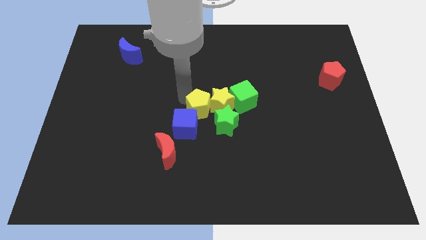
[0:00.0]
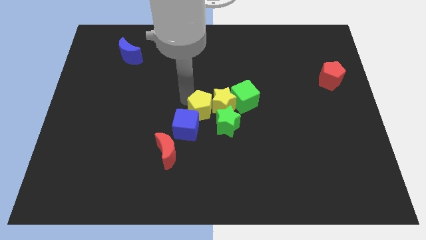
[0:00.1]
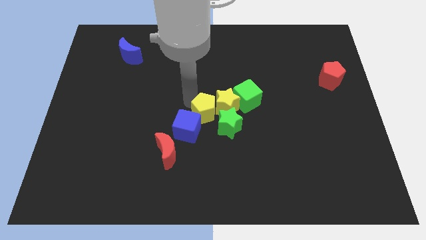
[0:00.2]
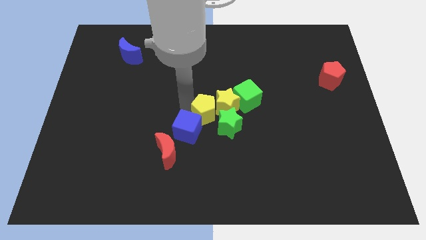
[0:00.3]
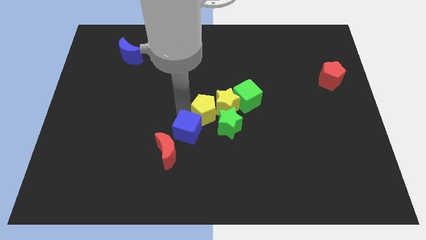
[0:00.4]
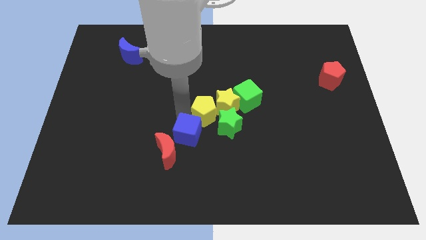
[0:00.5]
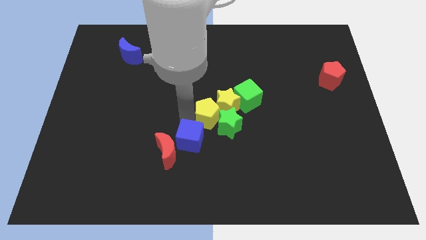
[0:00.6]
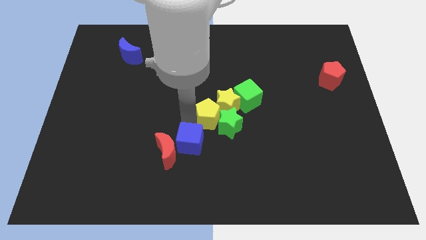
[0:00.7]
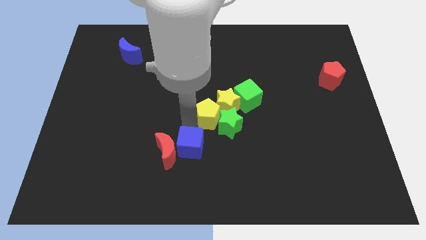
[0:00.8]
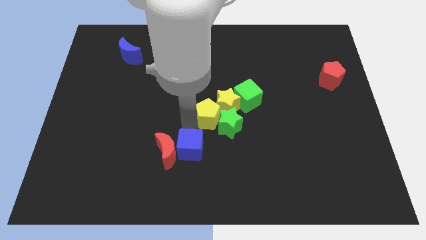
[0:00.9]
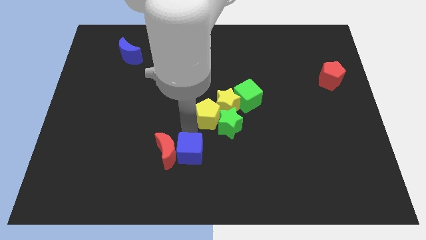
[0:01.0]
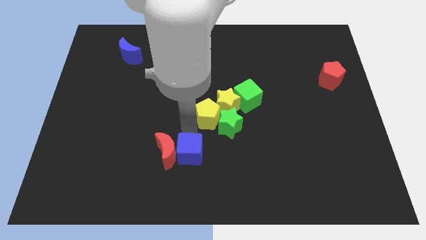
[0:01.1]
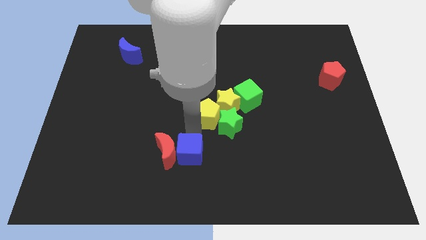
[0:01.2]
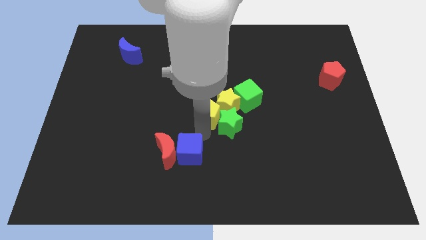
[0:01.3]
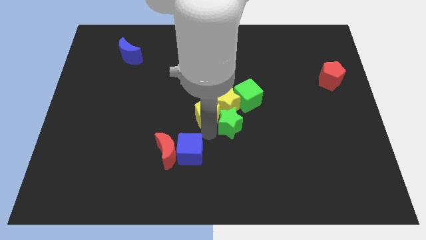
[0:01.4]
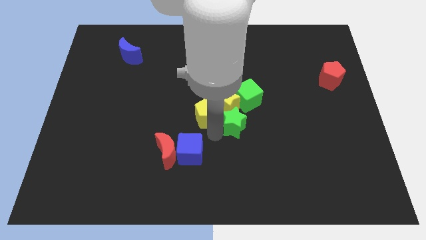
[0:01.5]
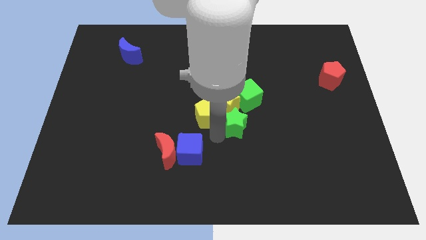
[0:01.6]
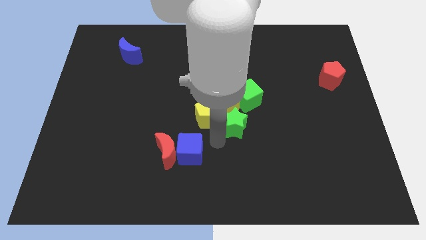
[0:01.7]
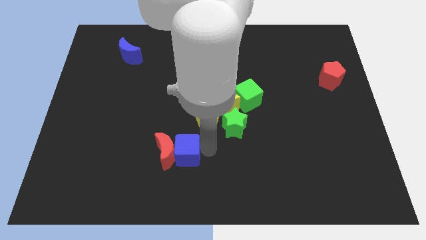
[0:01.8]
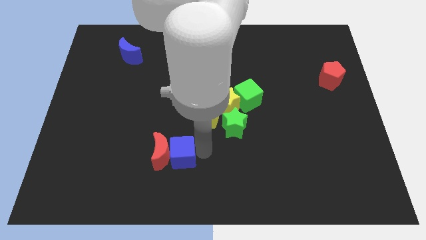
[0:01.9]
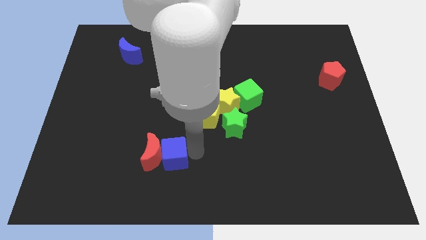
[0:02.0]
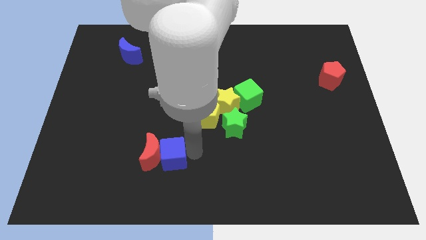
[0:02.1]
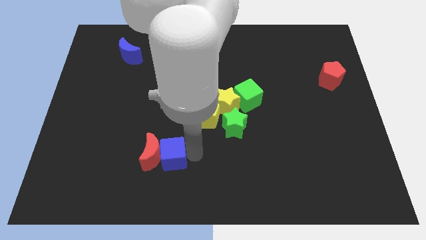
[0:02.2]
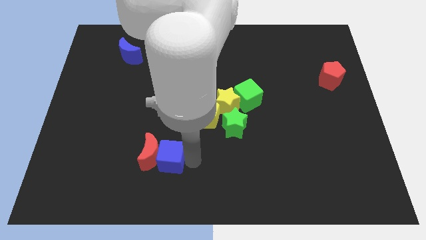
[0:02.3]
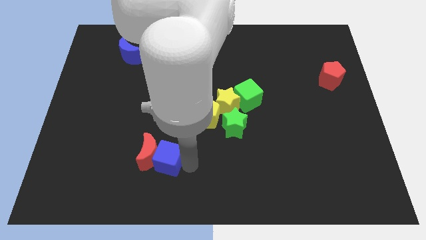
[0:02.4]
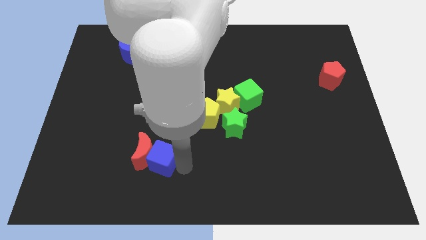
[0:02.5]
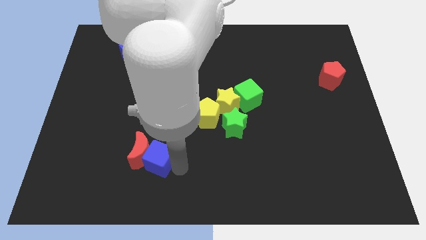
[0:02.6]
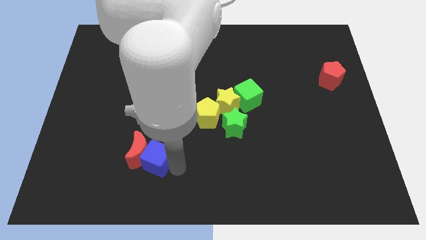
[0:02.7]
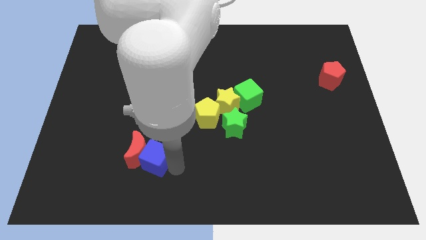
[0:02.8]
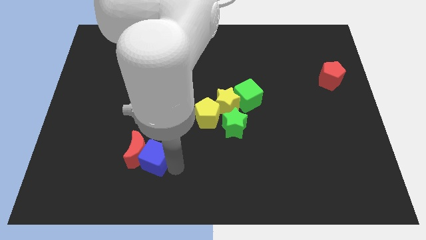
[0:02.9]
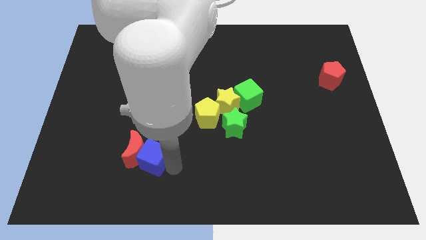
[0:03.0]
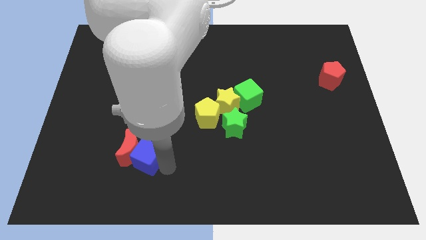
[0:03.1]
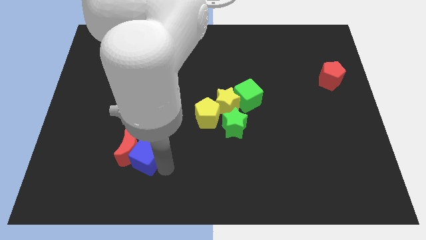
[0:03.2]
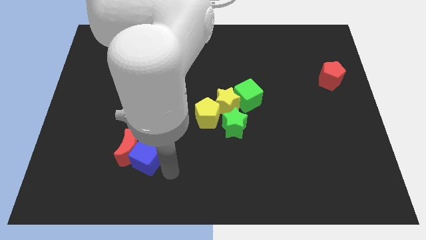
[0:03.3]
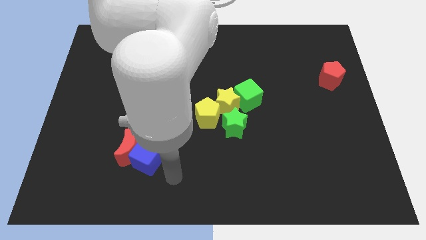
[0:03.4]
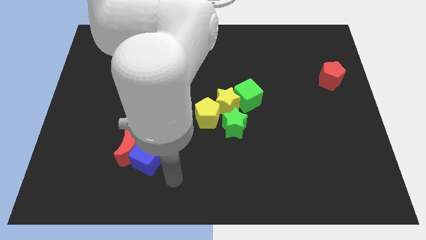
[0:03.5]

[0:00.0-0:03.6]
separate the blue cube with red moon towards left side

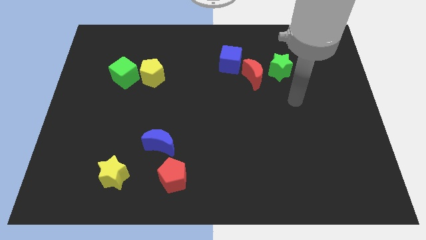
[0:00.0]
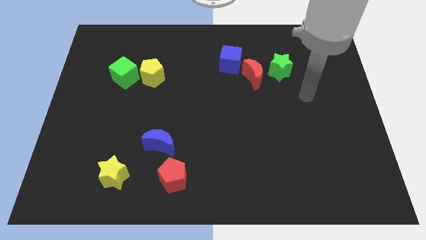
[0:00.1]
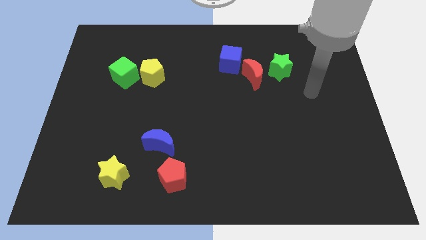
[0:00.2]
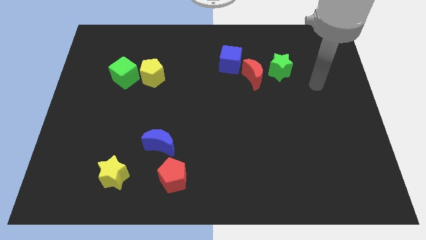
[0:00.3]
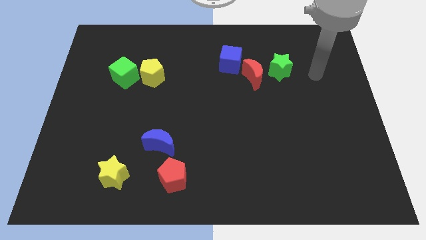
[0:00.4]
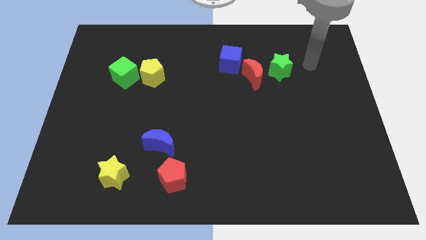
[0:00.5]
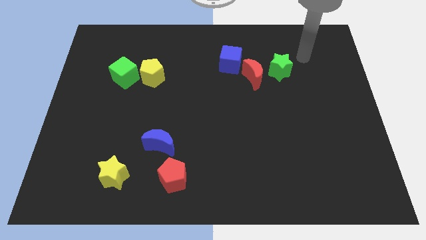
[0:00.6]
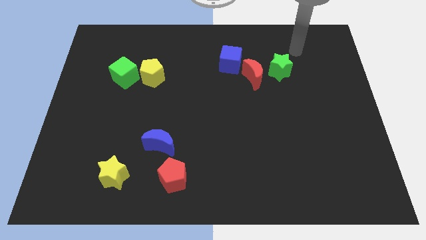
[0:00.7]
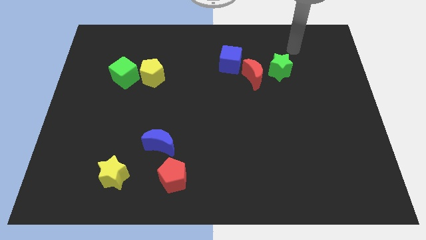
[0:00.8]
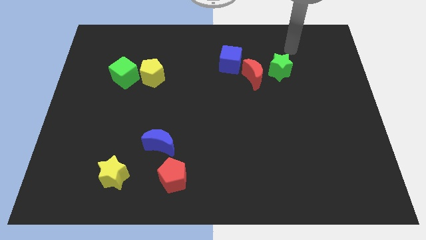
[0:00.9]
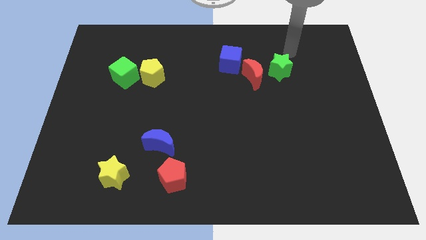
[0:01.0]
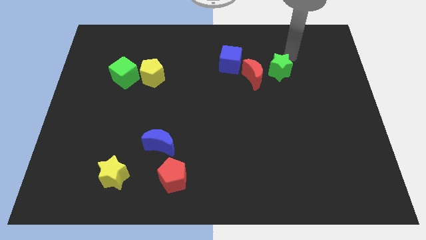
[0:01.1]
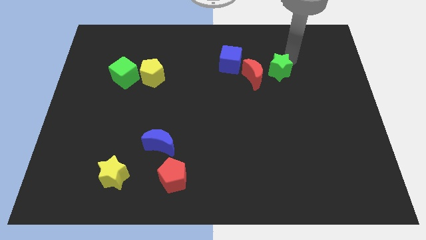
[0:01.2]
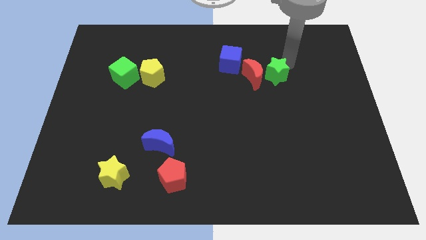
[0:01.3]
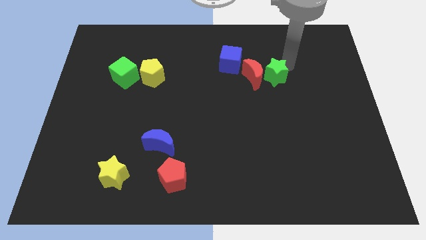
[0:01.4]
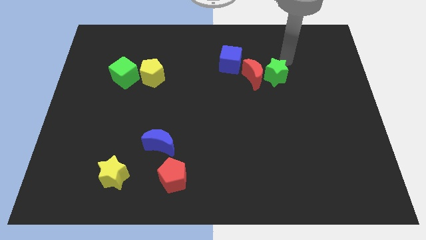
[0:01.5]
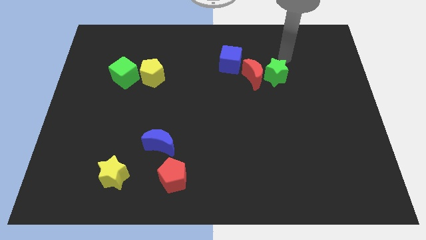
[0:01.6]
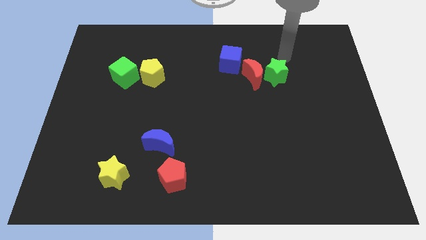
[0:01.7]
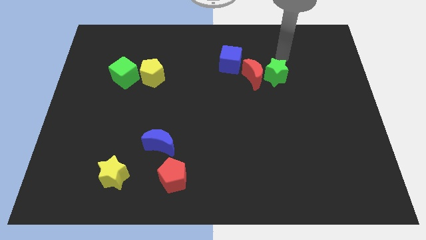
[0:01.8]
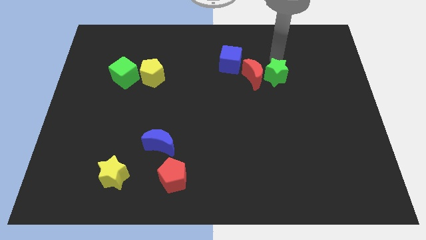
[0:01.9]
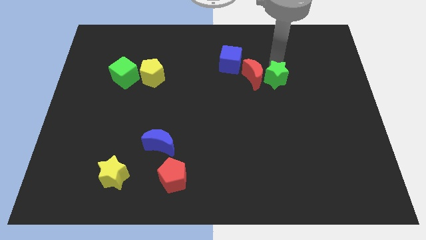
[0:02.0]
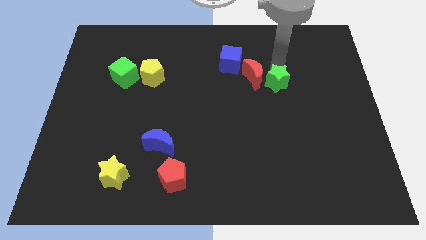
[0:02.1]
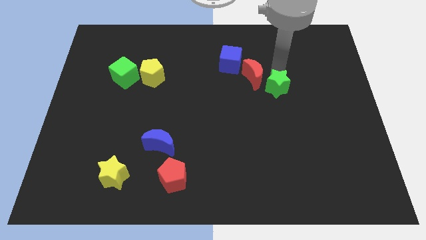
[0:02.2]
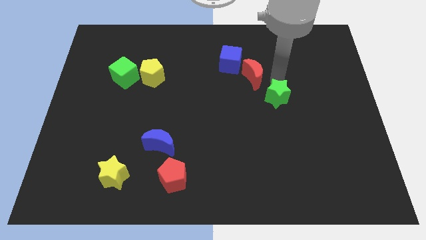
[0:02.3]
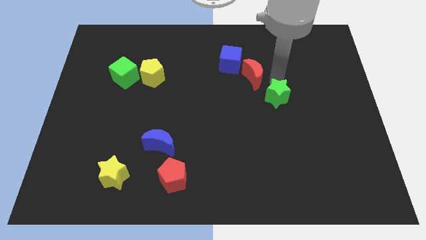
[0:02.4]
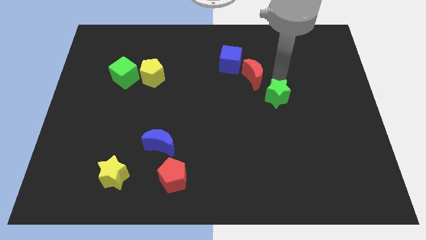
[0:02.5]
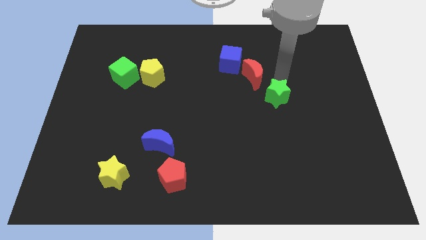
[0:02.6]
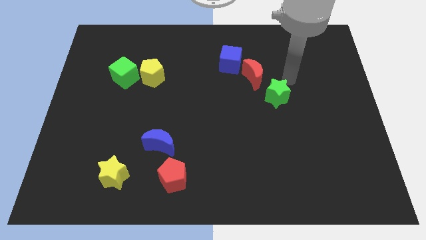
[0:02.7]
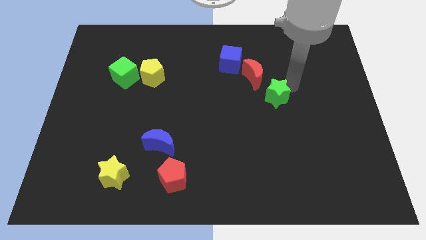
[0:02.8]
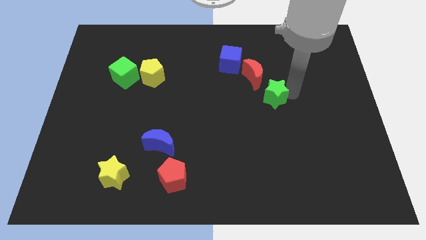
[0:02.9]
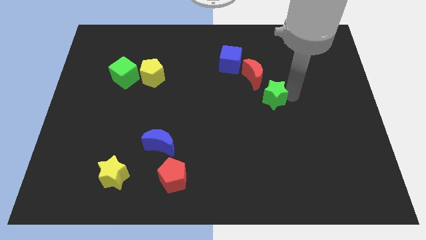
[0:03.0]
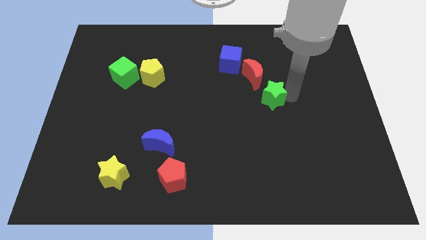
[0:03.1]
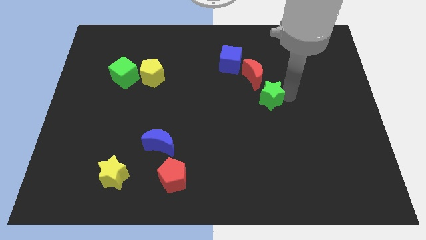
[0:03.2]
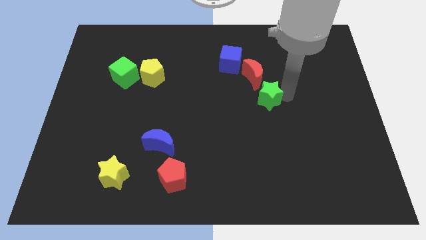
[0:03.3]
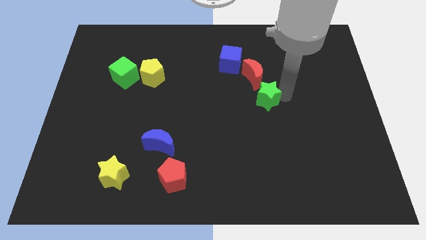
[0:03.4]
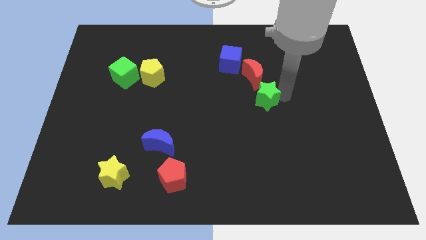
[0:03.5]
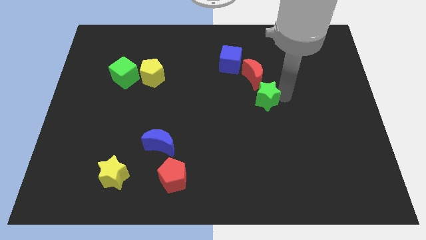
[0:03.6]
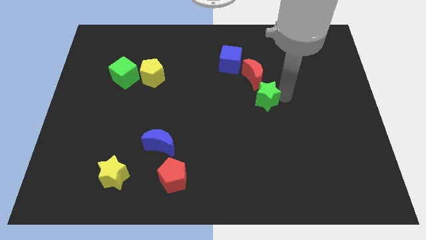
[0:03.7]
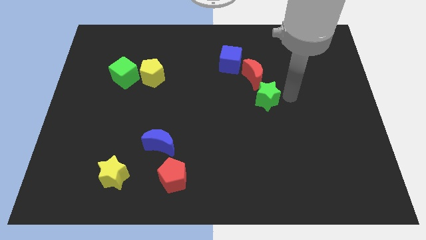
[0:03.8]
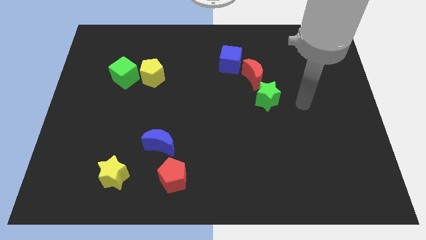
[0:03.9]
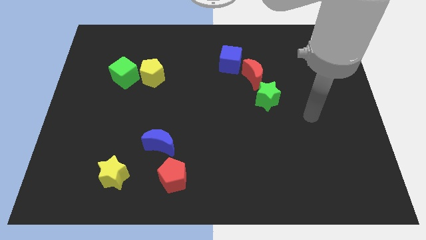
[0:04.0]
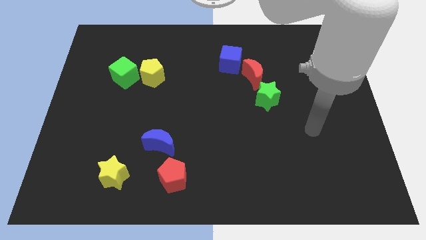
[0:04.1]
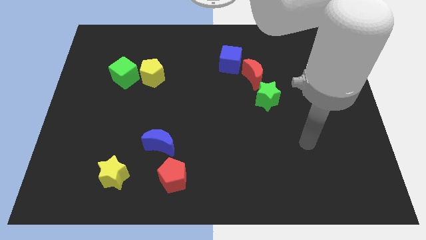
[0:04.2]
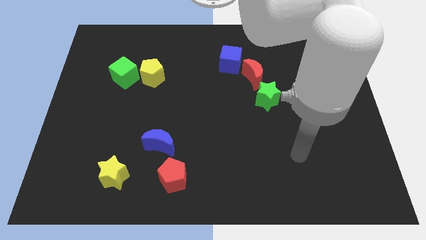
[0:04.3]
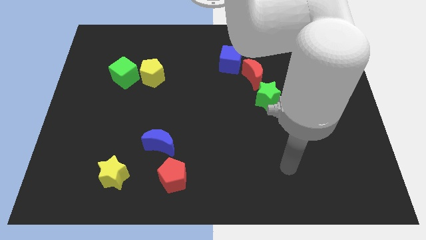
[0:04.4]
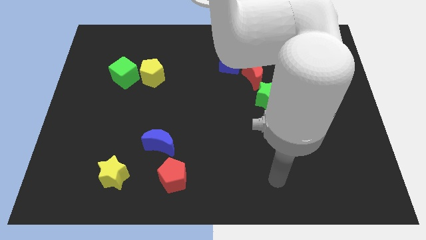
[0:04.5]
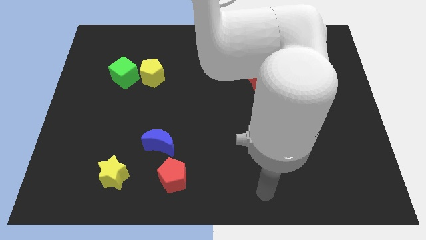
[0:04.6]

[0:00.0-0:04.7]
move the green star to the bottom of the red crescent

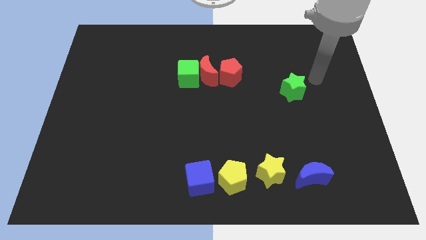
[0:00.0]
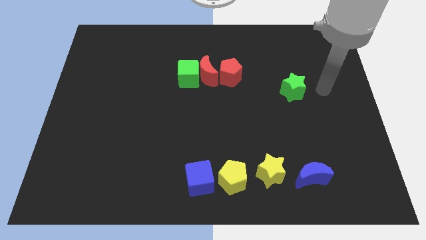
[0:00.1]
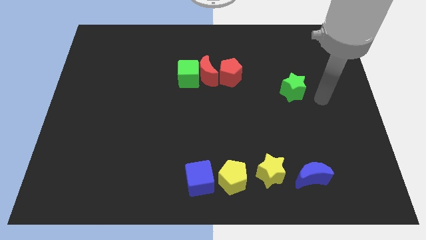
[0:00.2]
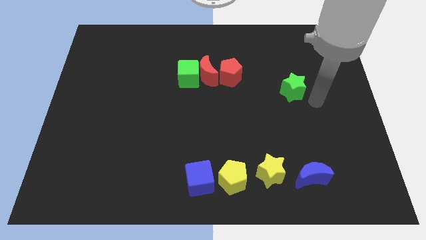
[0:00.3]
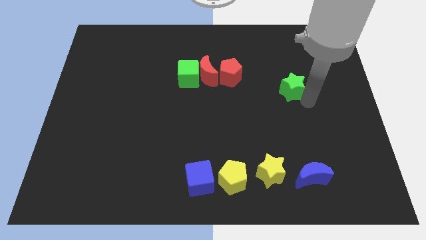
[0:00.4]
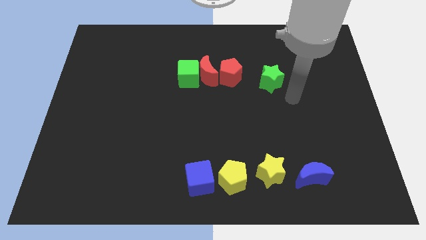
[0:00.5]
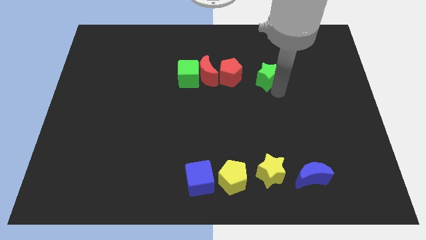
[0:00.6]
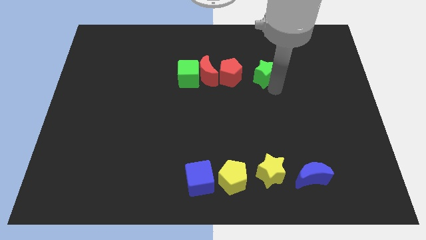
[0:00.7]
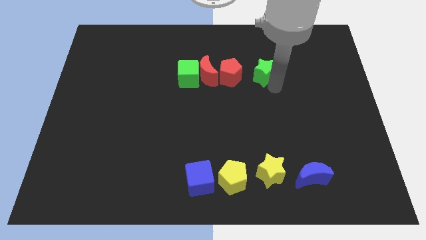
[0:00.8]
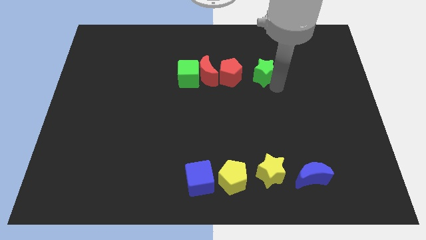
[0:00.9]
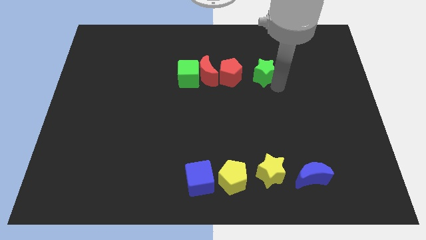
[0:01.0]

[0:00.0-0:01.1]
push the green star closer to the red pentagon
